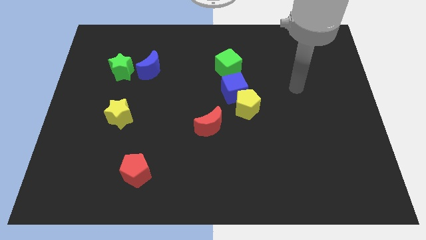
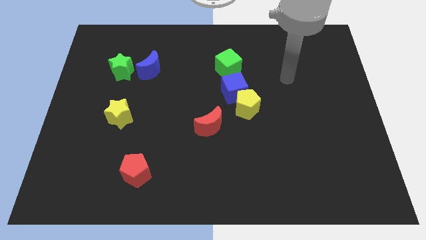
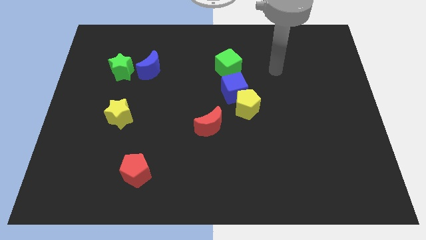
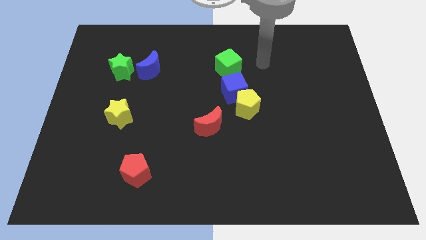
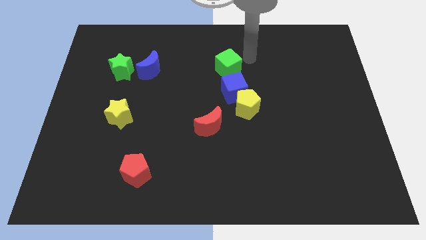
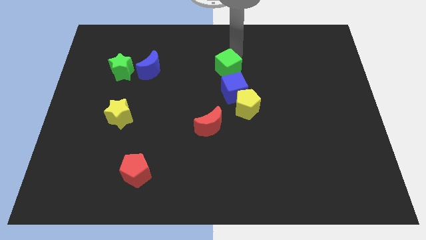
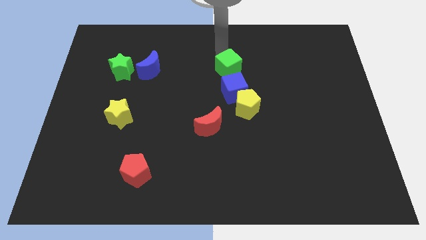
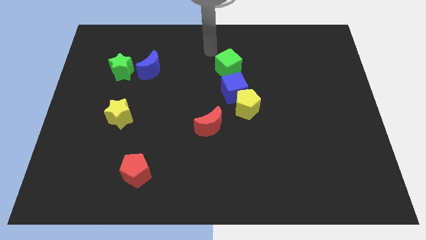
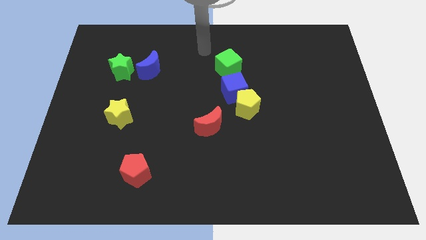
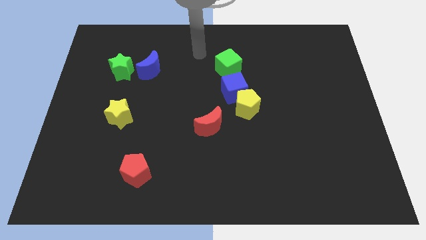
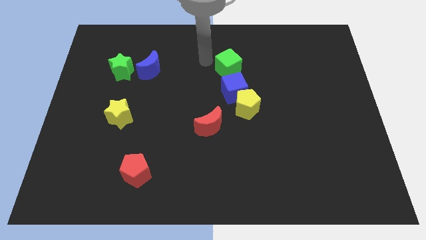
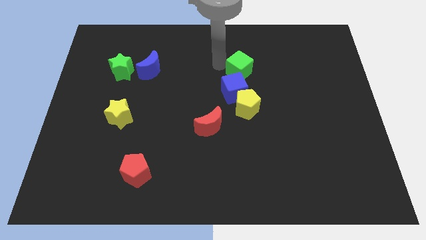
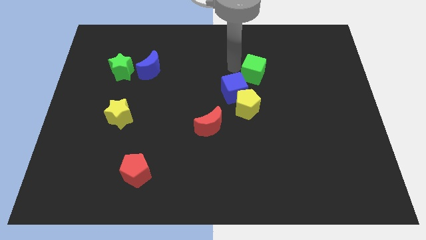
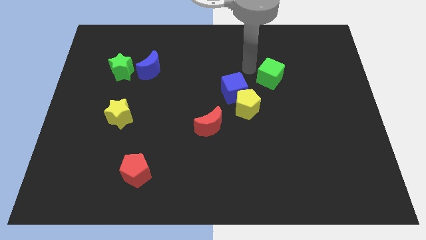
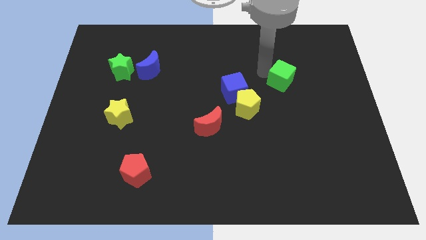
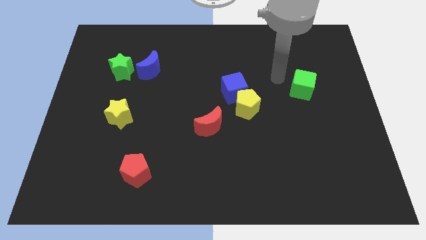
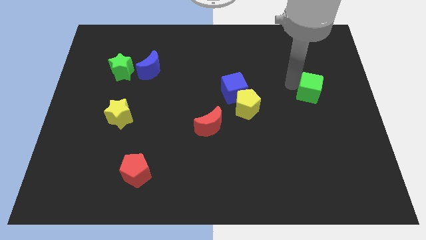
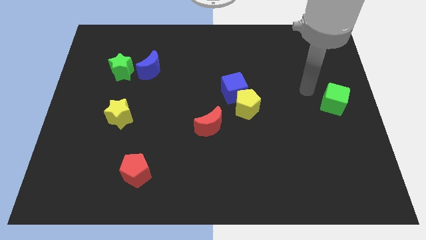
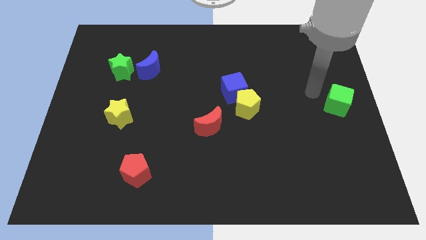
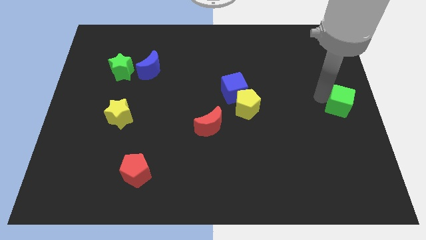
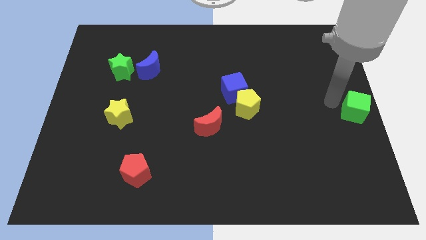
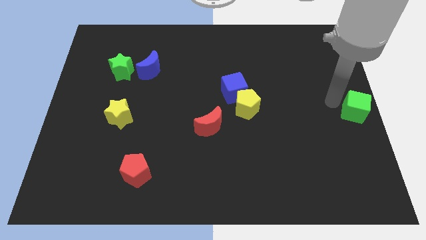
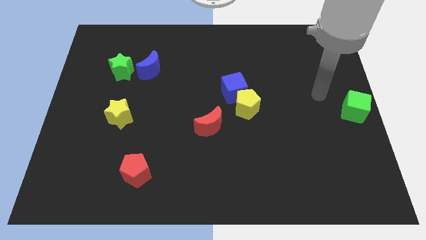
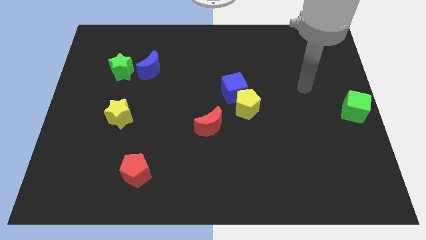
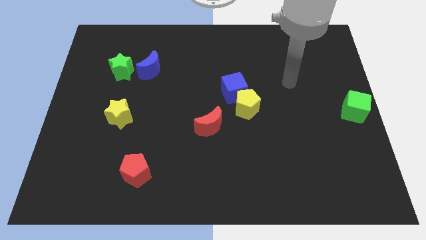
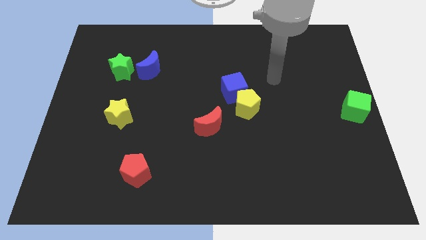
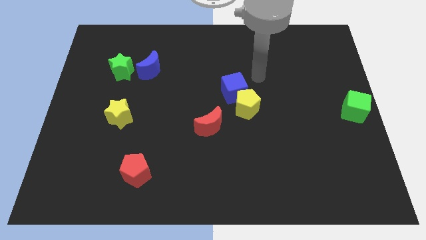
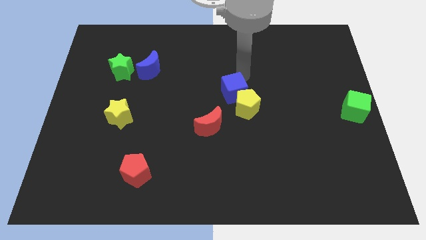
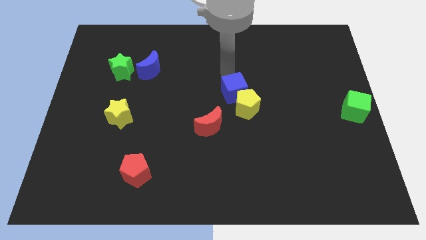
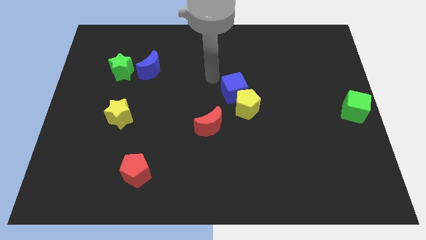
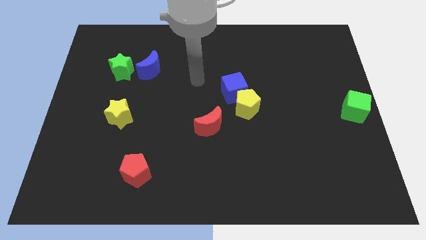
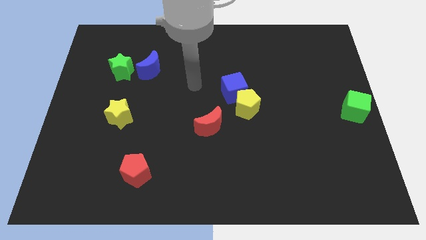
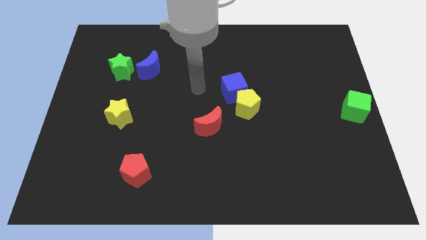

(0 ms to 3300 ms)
move the green cube to the right center of the board

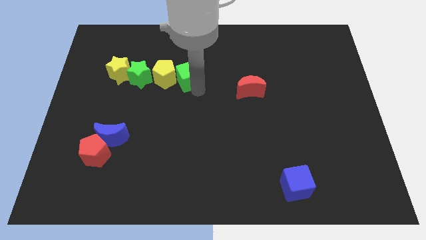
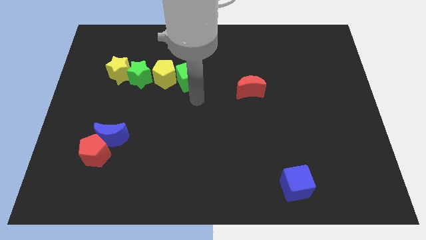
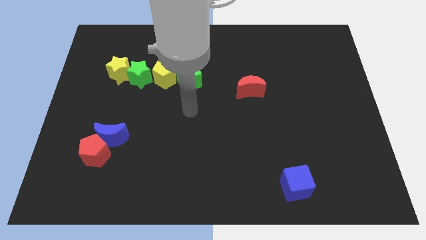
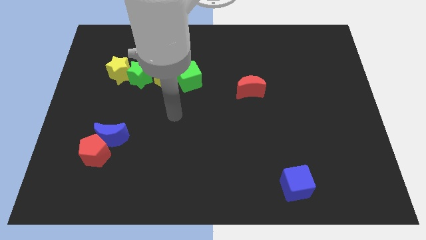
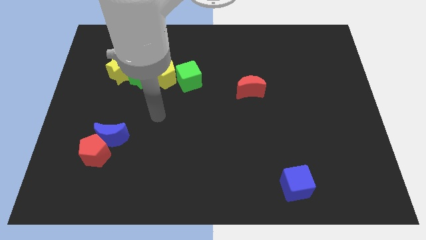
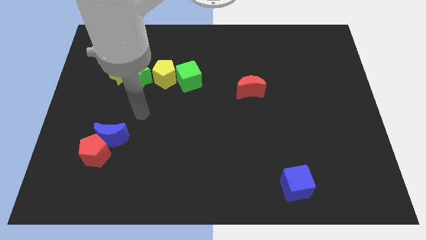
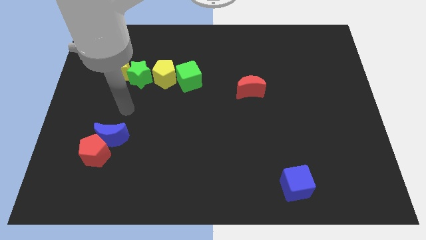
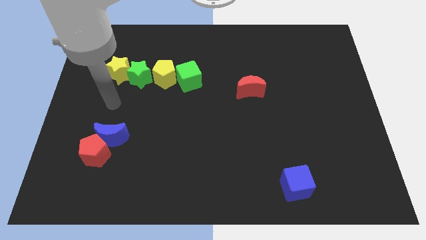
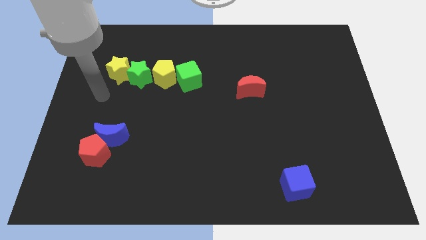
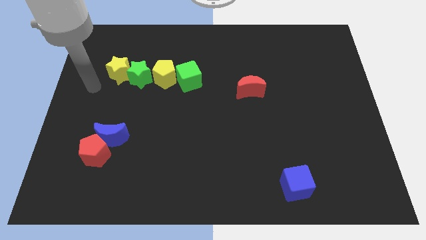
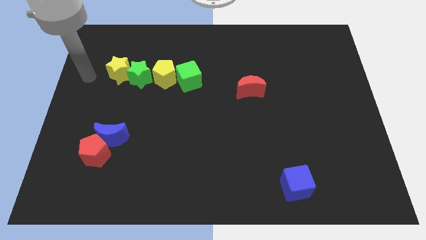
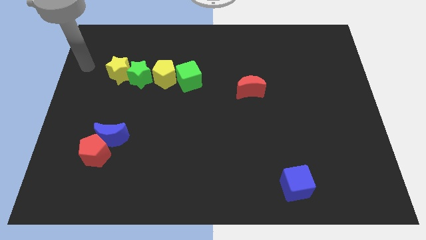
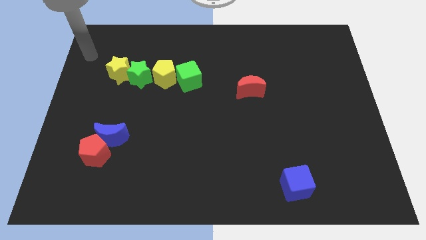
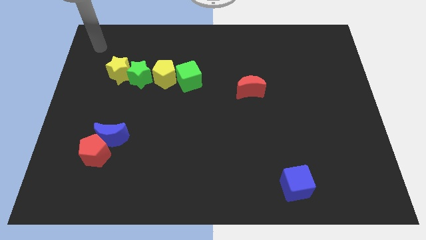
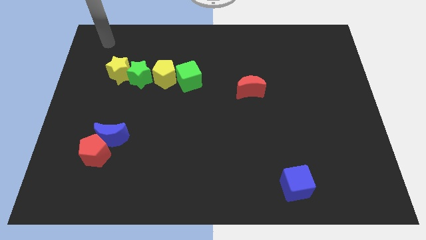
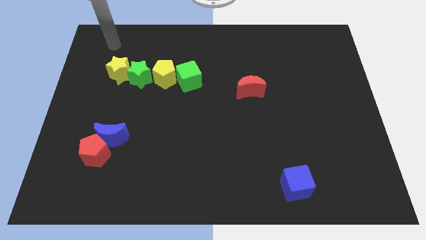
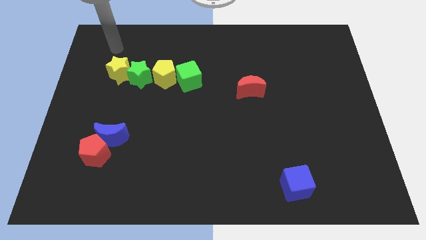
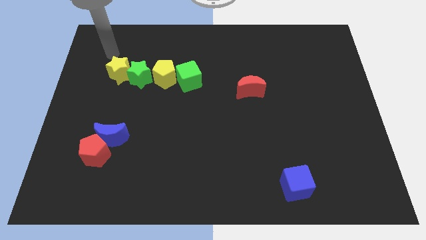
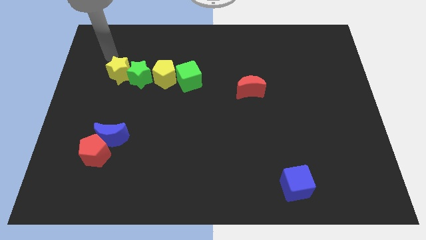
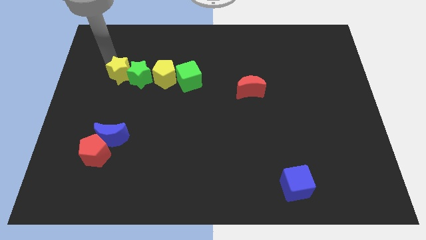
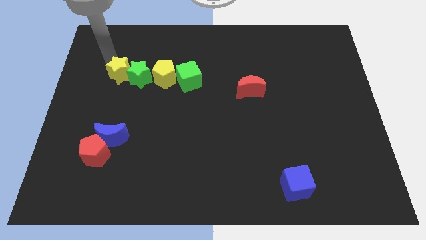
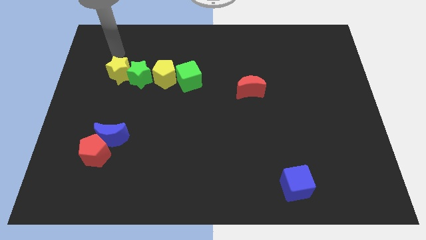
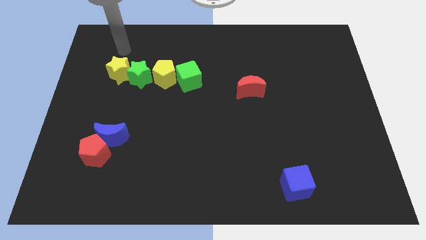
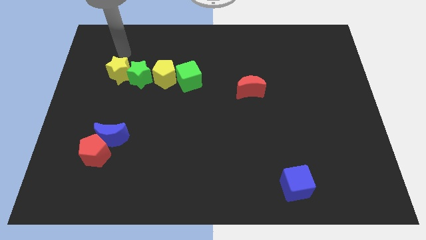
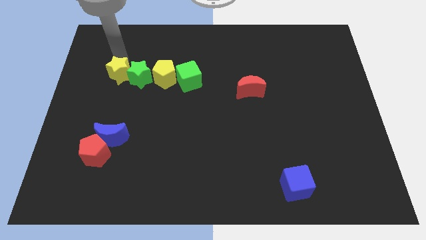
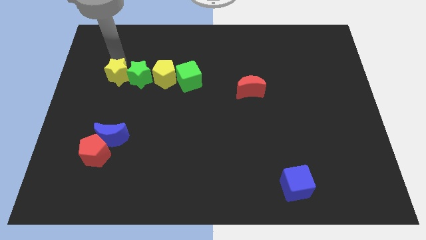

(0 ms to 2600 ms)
go away from the green cube

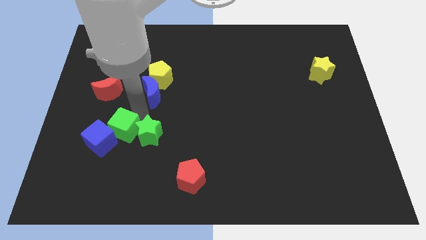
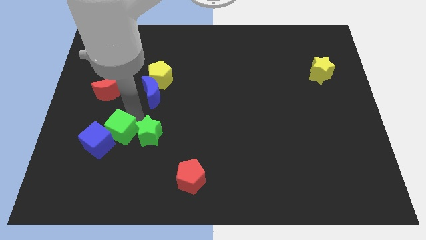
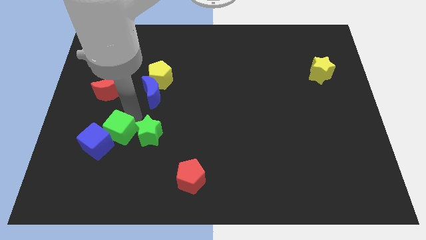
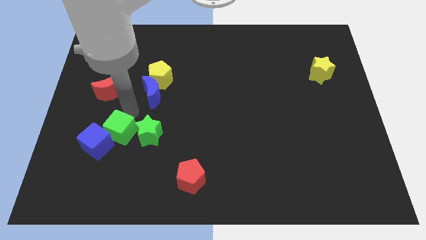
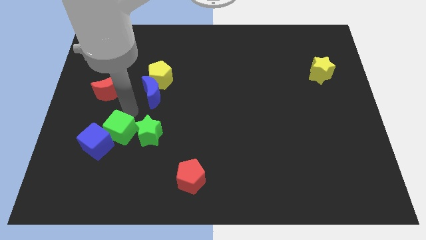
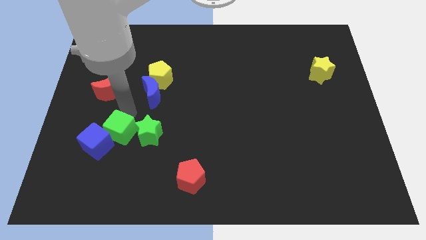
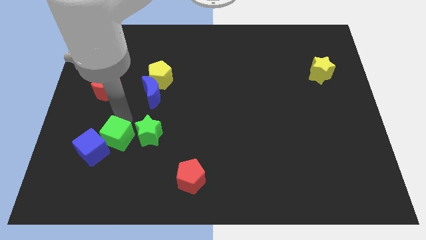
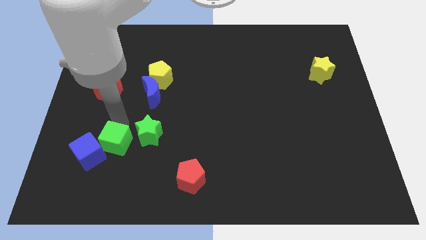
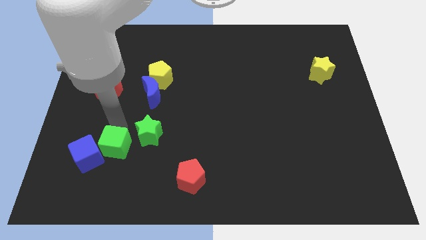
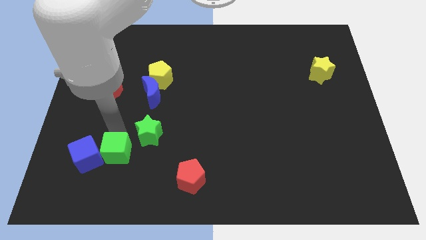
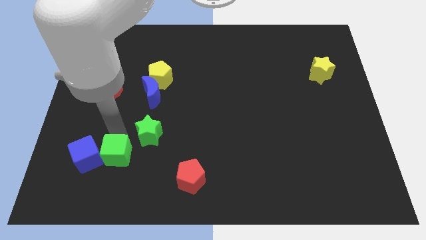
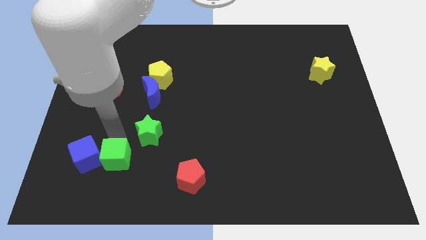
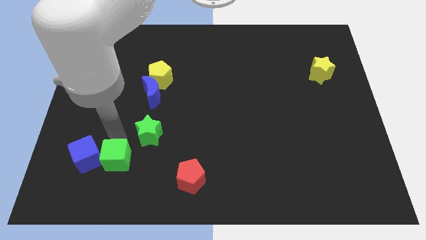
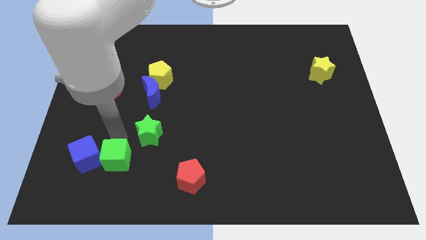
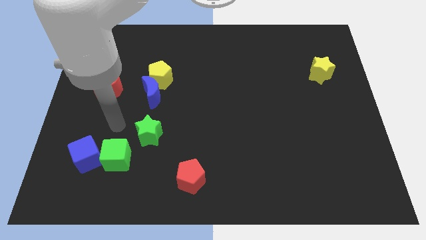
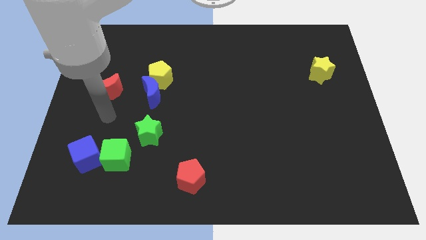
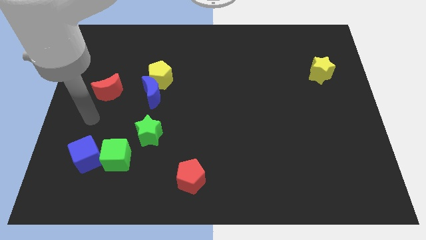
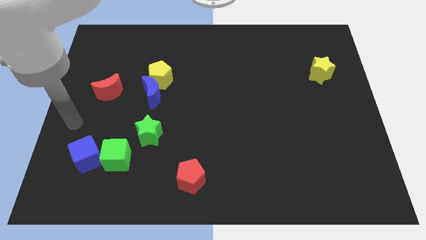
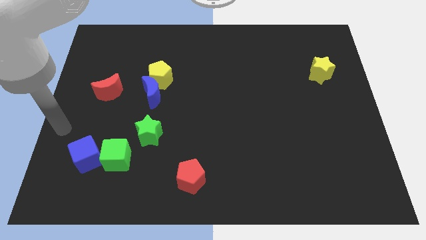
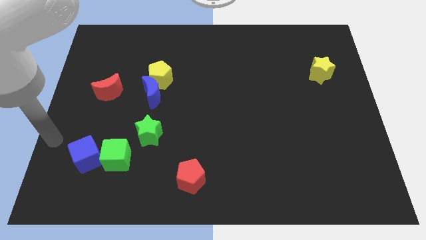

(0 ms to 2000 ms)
move the cubes to the bottom of the board

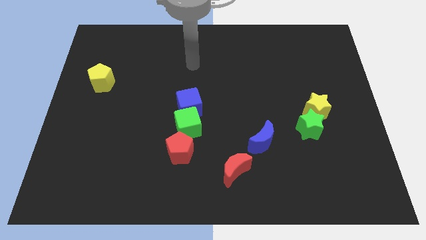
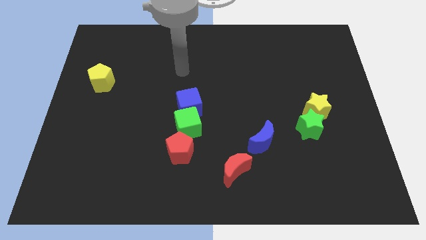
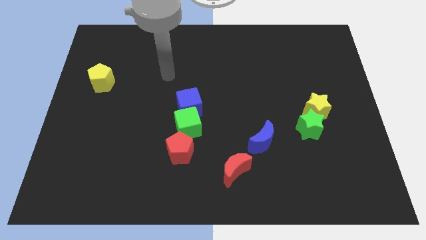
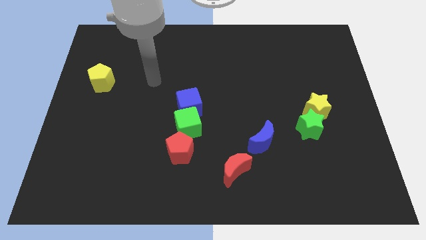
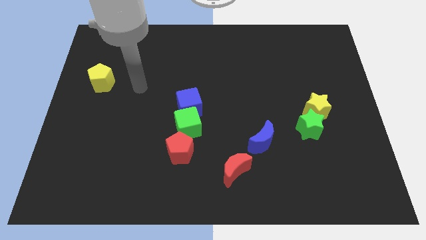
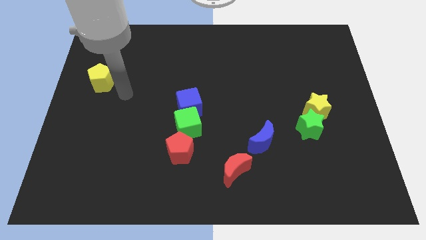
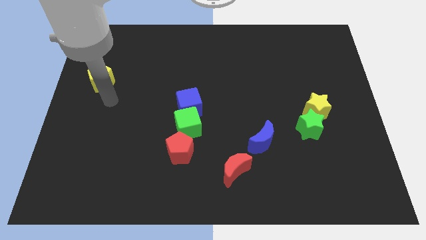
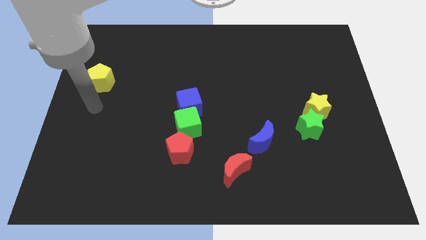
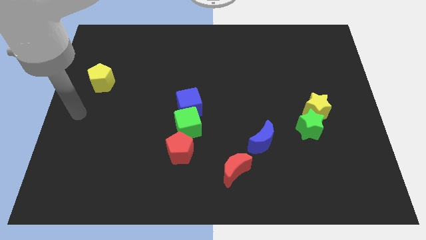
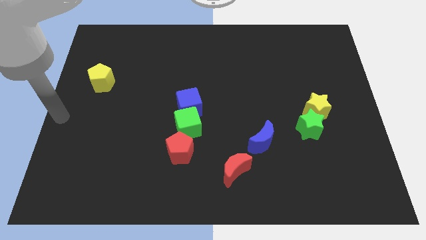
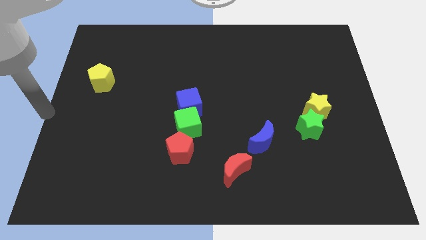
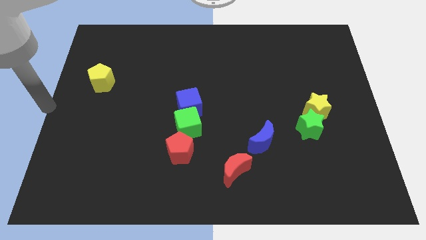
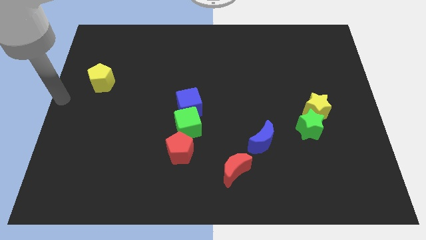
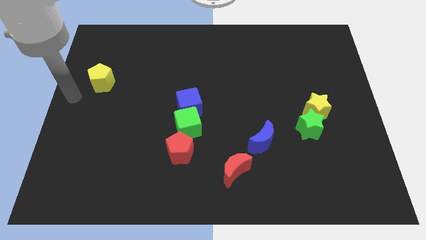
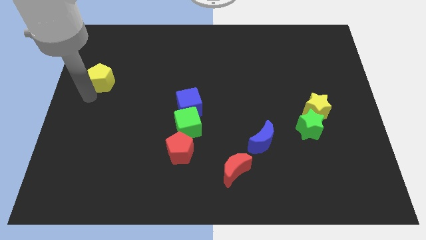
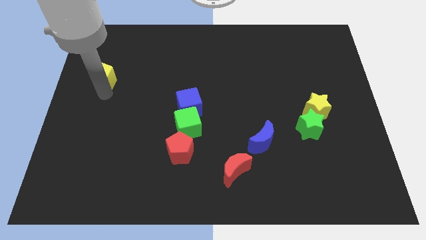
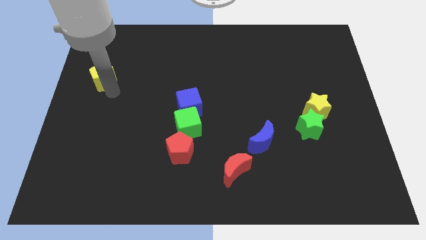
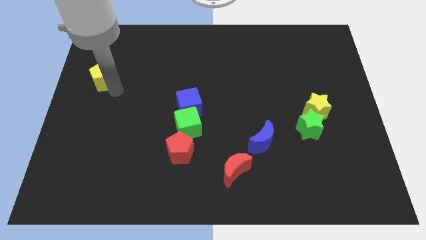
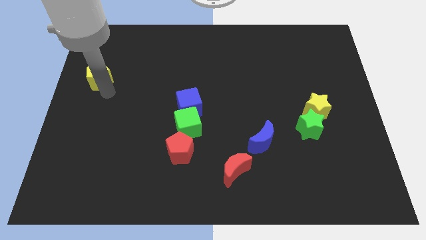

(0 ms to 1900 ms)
slightly move the yellow pentagon to the left
